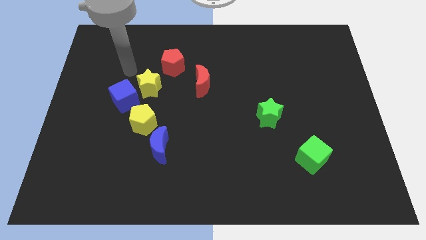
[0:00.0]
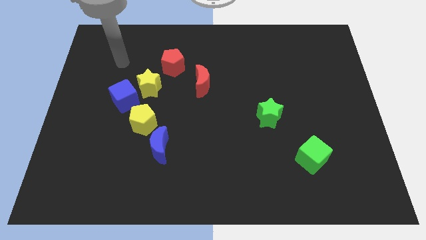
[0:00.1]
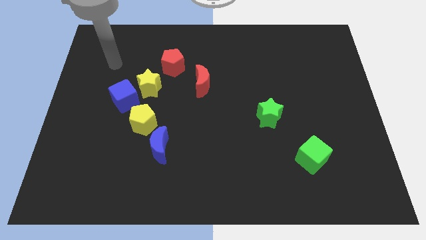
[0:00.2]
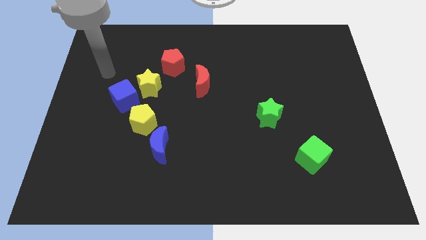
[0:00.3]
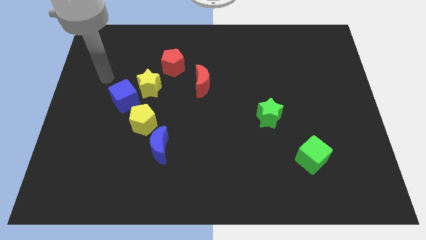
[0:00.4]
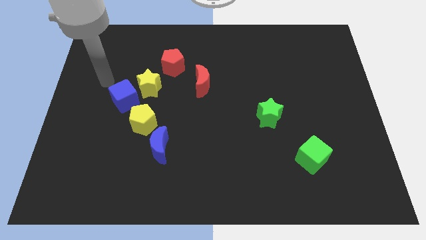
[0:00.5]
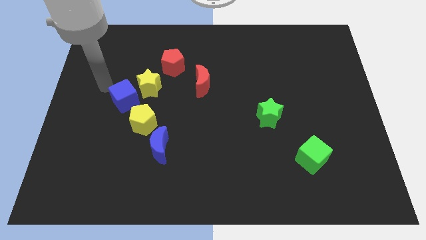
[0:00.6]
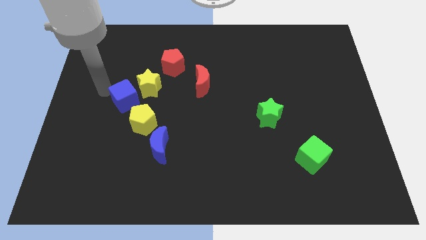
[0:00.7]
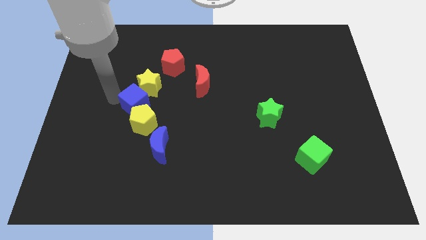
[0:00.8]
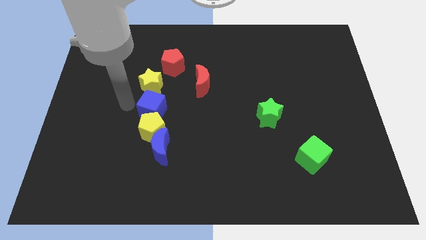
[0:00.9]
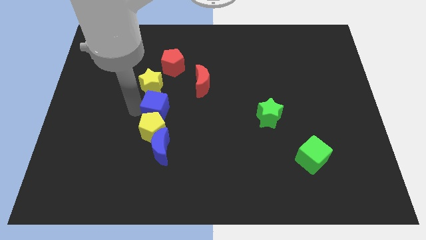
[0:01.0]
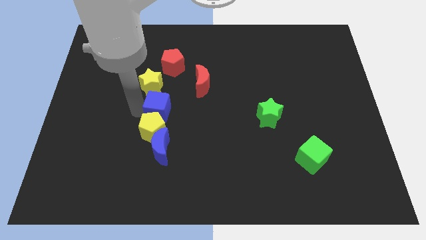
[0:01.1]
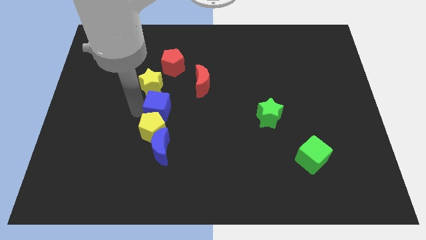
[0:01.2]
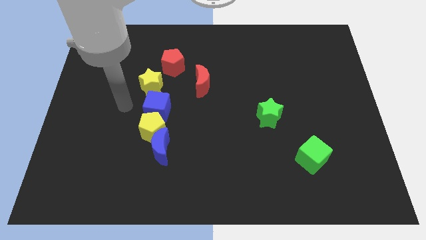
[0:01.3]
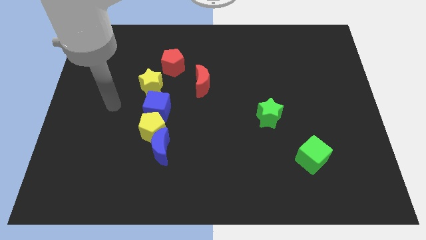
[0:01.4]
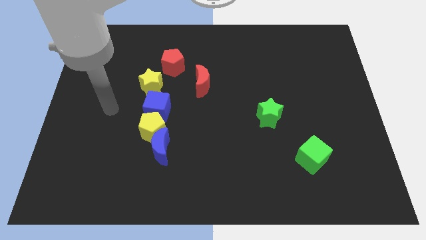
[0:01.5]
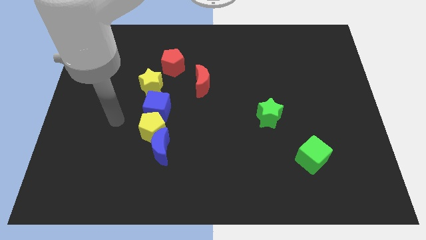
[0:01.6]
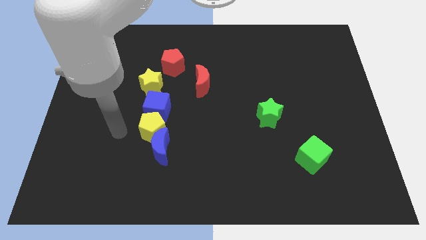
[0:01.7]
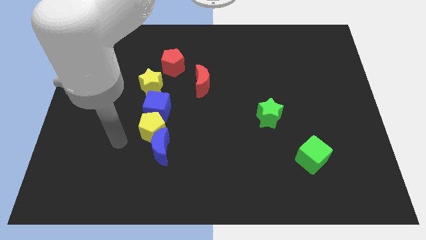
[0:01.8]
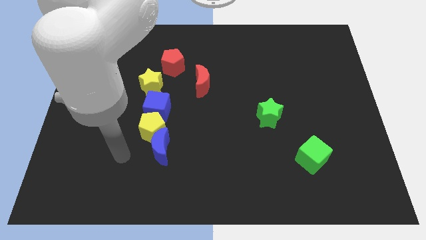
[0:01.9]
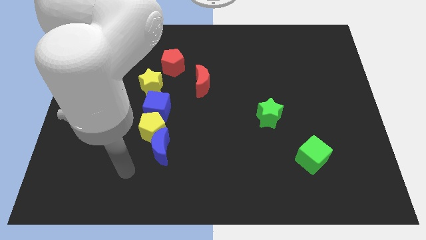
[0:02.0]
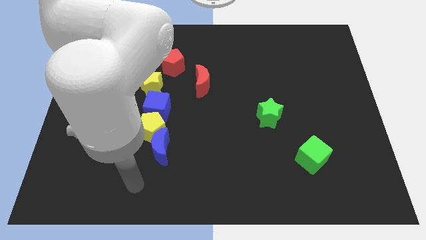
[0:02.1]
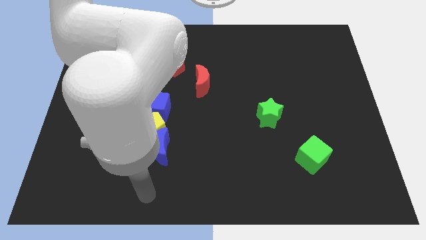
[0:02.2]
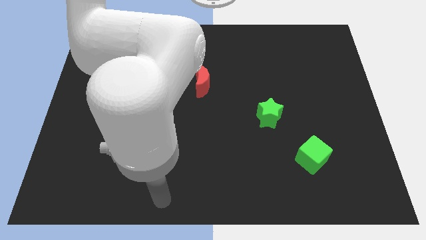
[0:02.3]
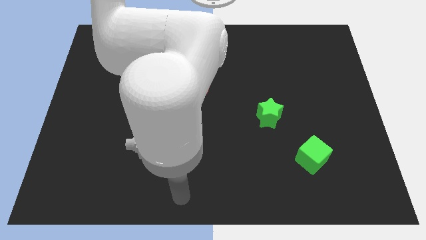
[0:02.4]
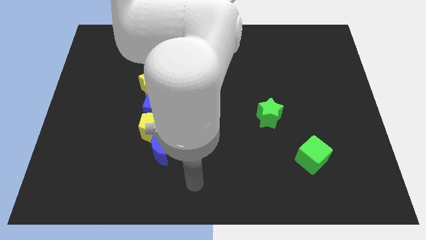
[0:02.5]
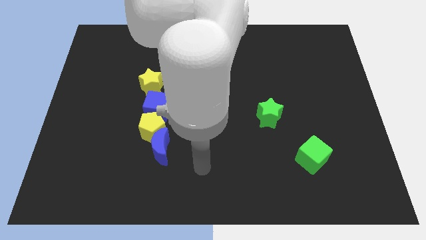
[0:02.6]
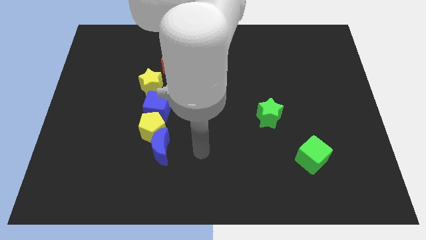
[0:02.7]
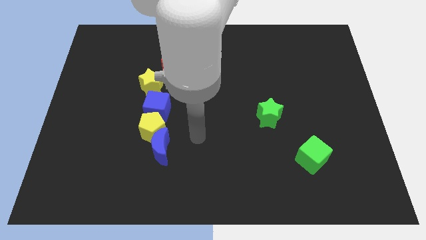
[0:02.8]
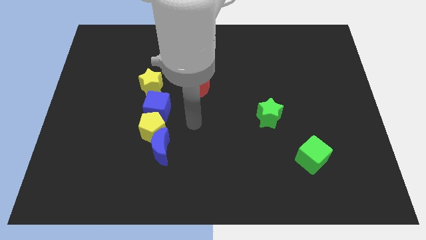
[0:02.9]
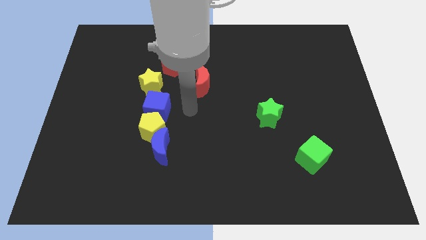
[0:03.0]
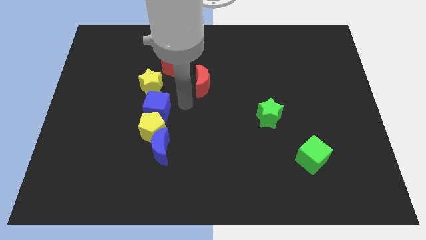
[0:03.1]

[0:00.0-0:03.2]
push the blue cube in between the yellow star and yellow pentagon

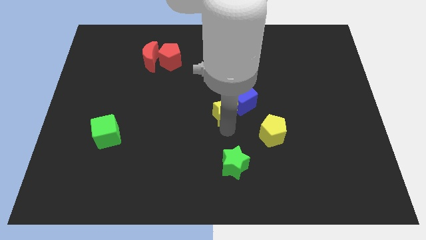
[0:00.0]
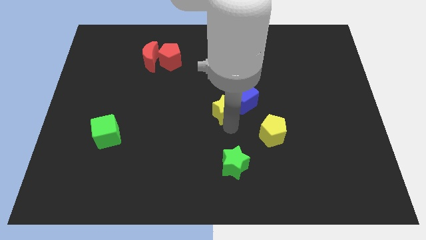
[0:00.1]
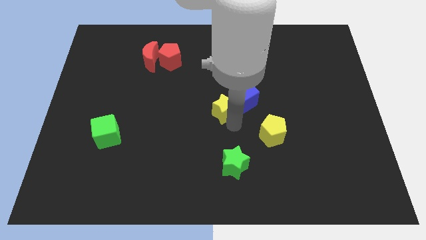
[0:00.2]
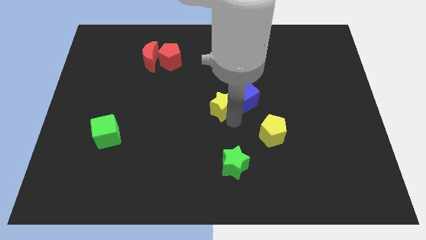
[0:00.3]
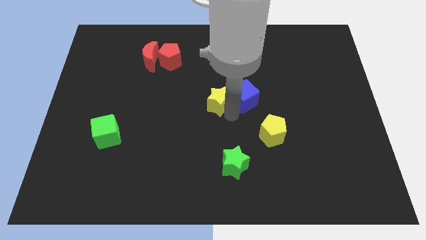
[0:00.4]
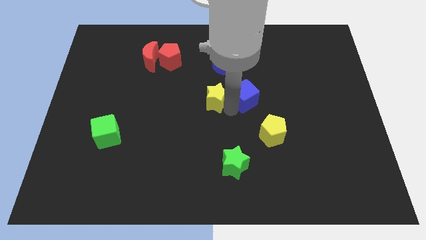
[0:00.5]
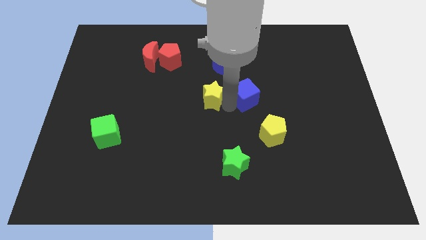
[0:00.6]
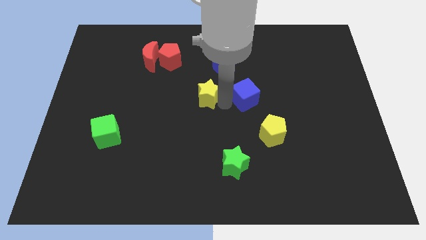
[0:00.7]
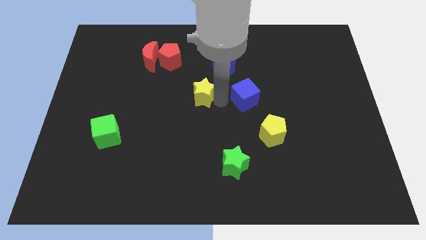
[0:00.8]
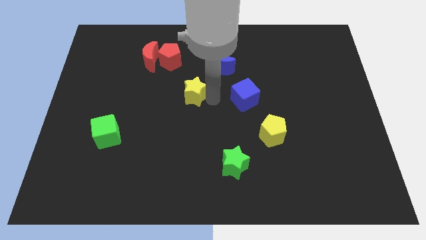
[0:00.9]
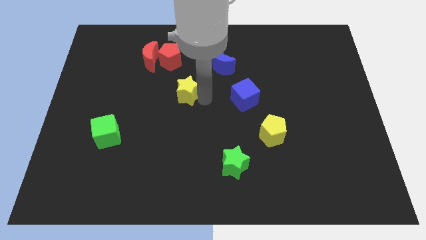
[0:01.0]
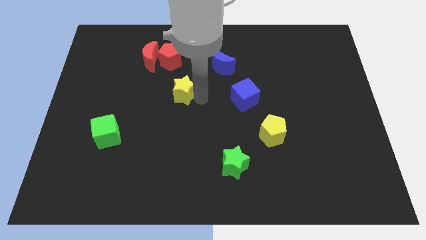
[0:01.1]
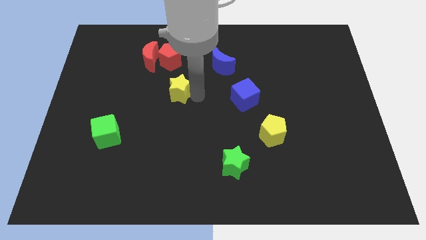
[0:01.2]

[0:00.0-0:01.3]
separate the yellow star from blue cube

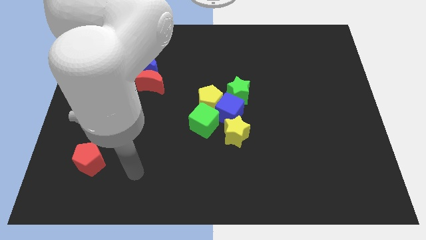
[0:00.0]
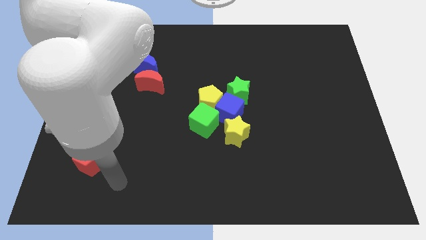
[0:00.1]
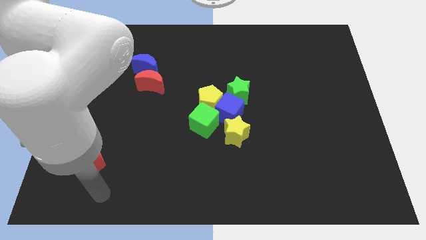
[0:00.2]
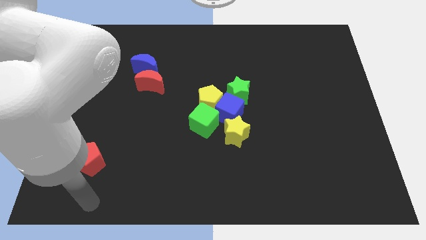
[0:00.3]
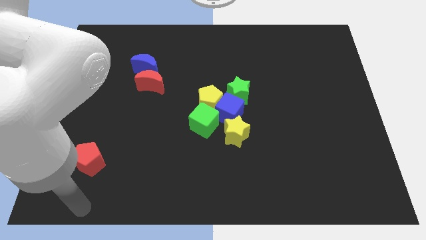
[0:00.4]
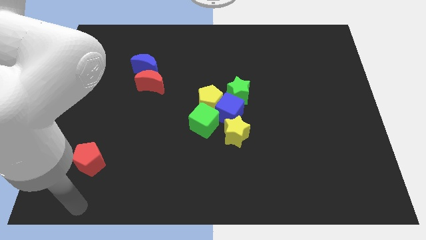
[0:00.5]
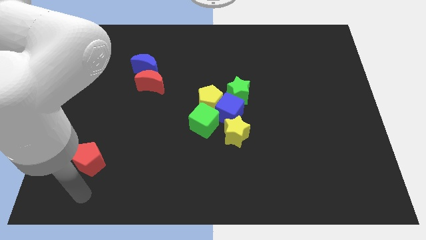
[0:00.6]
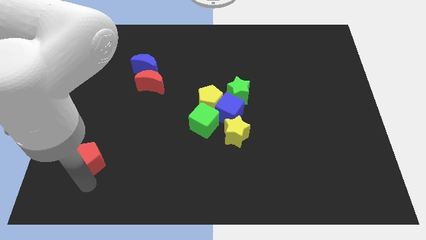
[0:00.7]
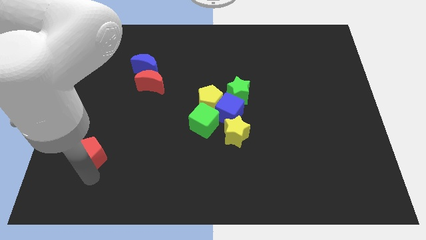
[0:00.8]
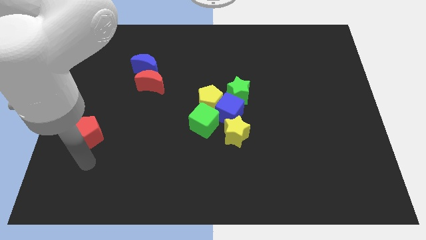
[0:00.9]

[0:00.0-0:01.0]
move arm below the red pentagon

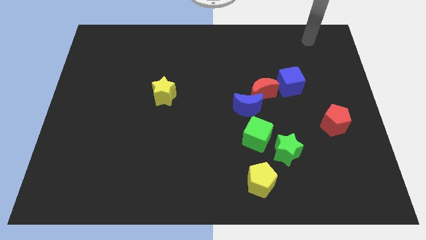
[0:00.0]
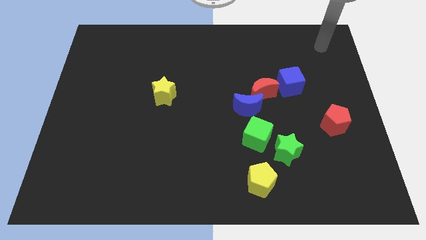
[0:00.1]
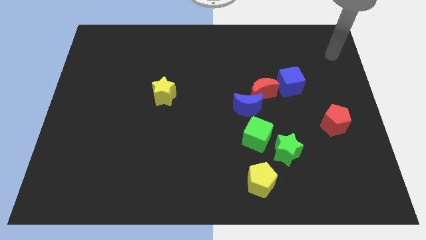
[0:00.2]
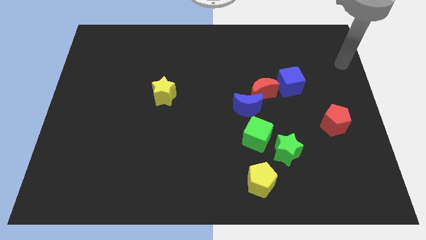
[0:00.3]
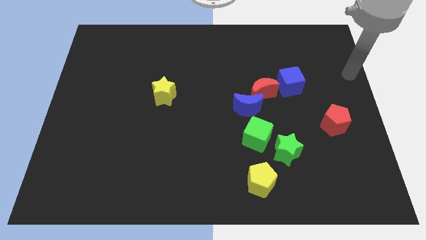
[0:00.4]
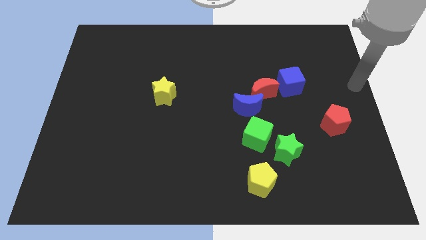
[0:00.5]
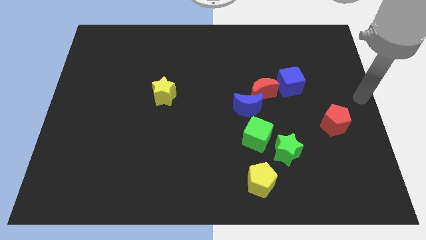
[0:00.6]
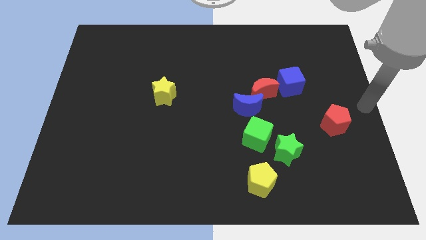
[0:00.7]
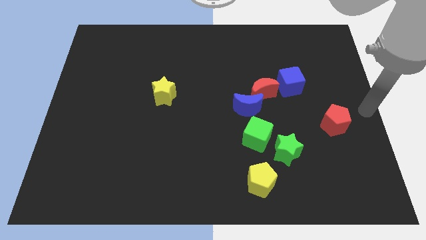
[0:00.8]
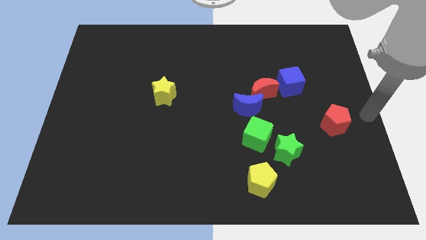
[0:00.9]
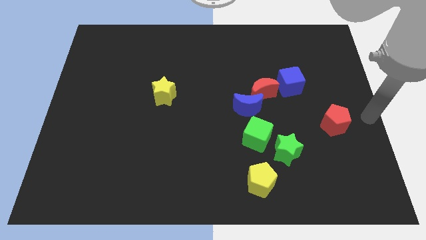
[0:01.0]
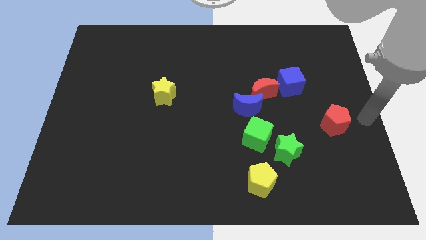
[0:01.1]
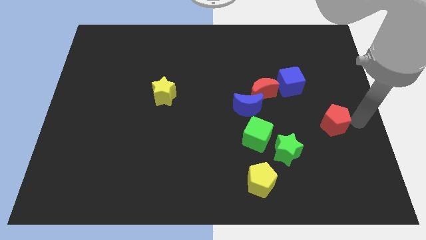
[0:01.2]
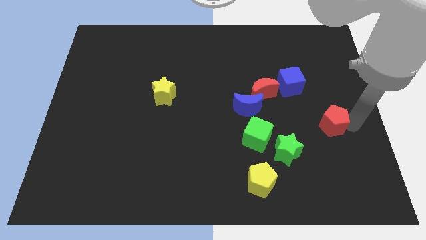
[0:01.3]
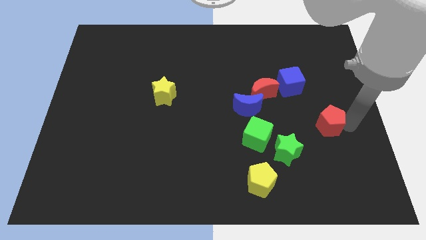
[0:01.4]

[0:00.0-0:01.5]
touch the right side of the red pentagon

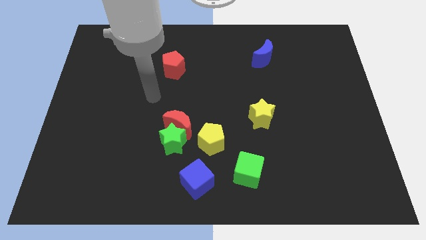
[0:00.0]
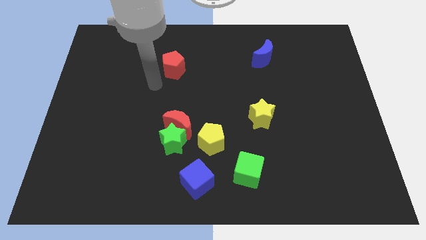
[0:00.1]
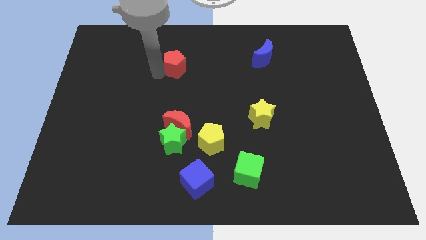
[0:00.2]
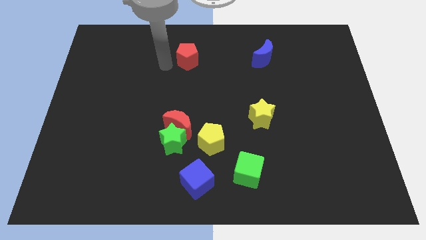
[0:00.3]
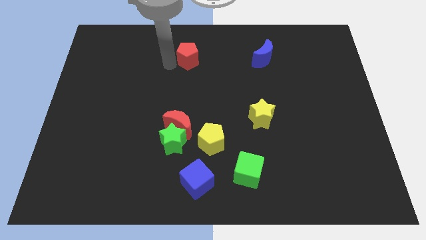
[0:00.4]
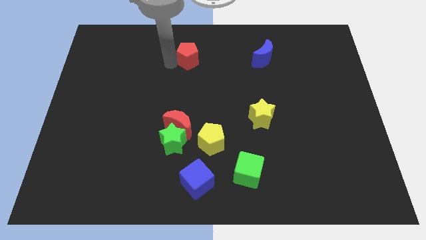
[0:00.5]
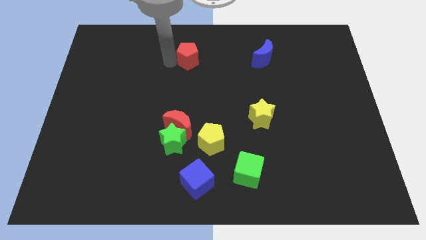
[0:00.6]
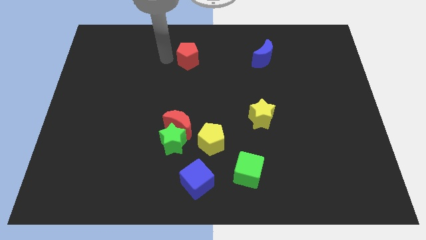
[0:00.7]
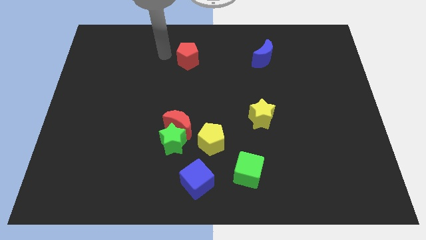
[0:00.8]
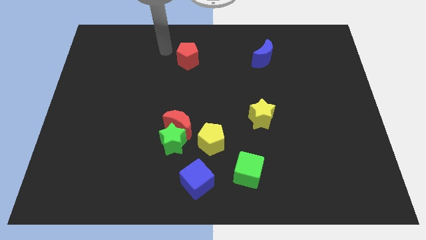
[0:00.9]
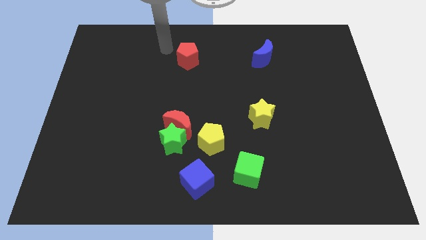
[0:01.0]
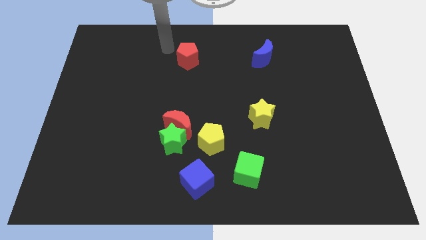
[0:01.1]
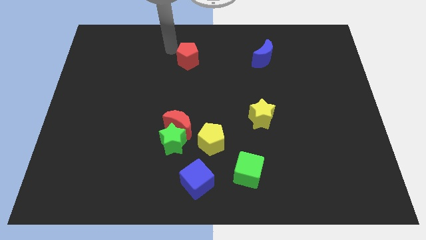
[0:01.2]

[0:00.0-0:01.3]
place the red pentagon left to the blue moon

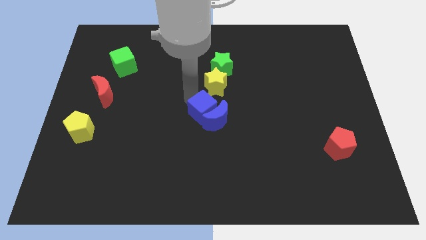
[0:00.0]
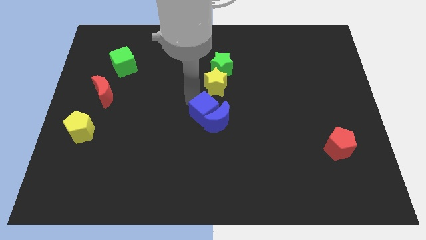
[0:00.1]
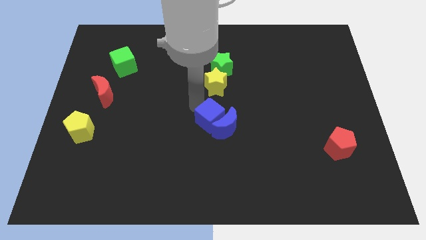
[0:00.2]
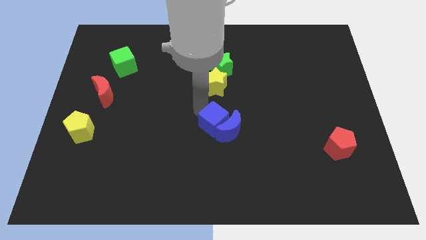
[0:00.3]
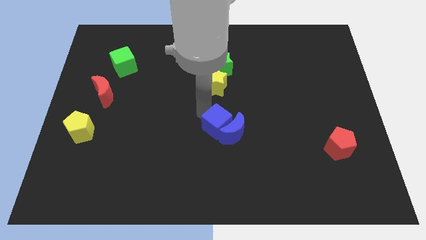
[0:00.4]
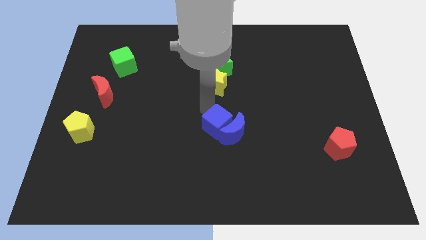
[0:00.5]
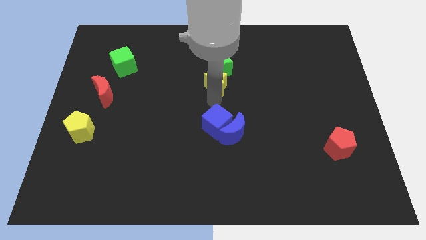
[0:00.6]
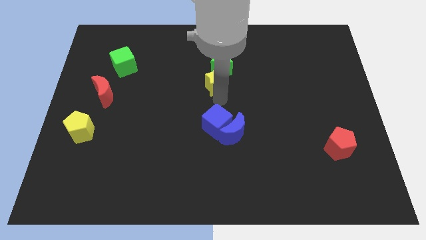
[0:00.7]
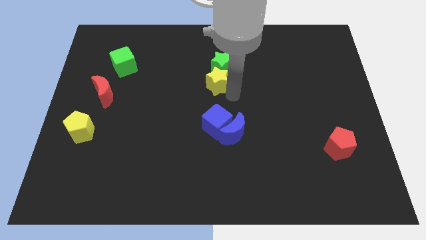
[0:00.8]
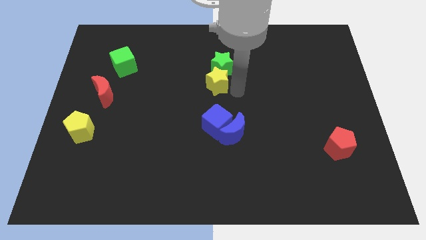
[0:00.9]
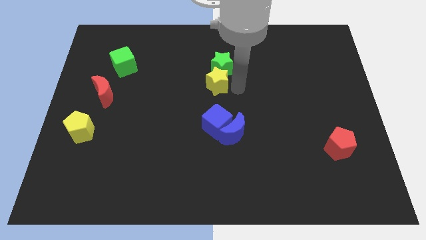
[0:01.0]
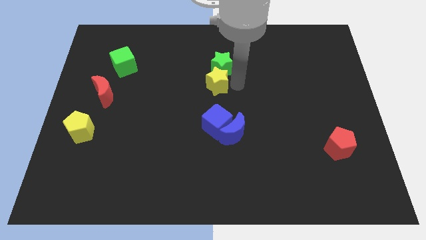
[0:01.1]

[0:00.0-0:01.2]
move the blue blocks to the bottom of the yellow star
